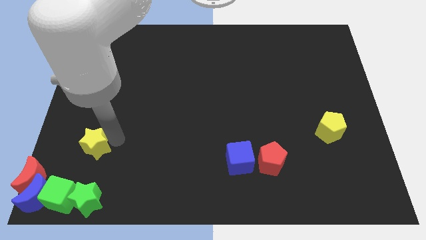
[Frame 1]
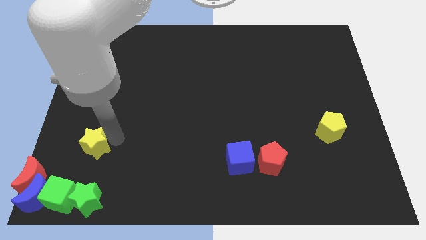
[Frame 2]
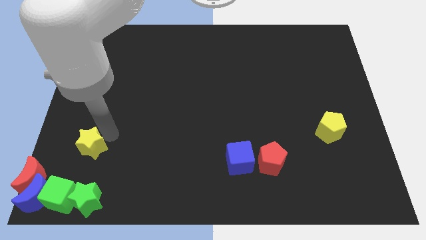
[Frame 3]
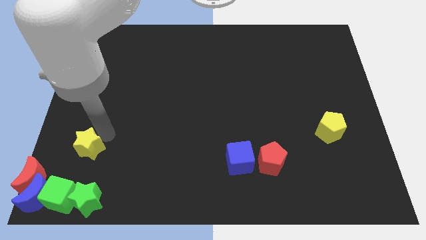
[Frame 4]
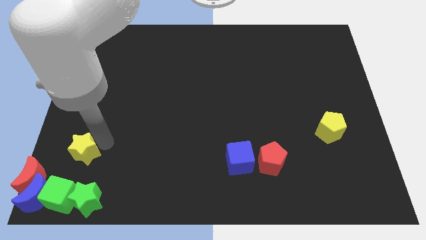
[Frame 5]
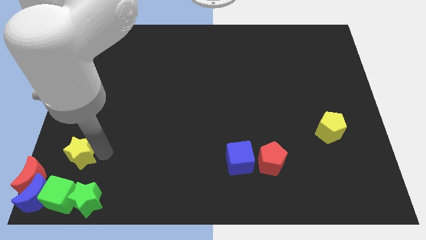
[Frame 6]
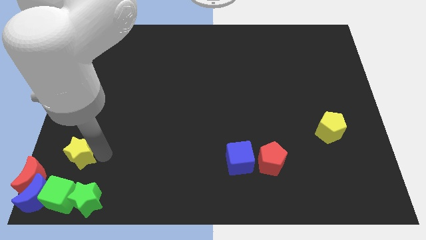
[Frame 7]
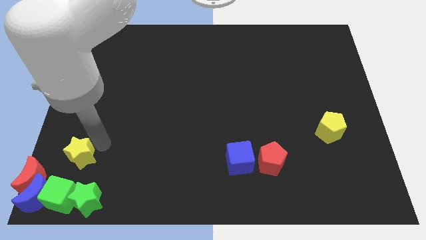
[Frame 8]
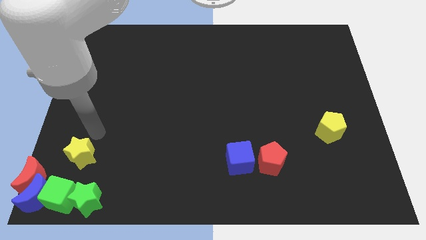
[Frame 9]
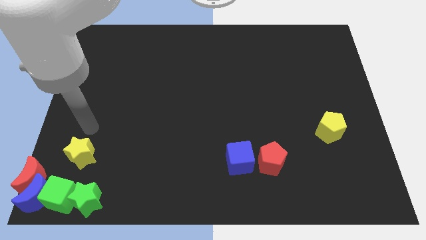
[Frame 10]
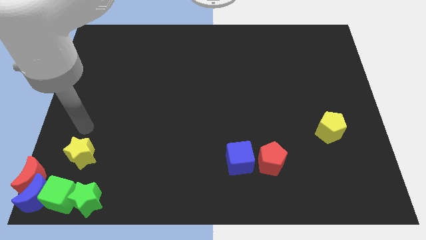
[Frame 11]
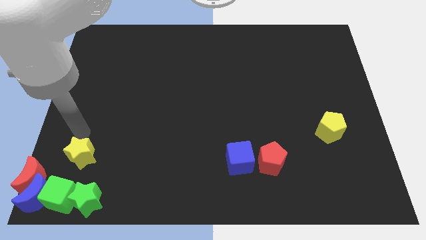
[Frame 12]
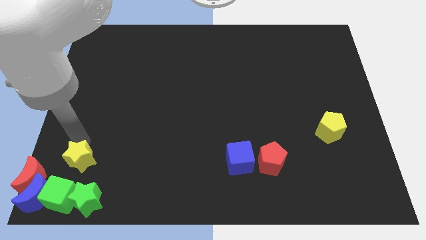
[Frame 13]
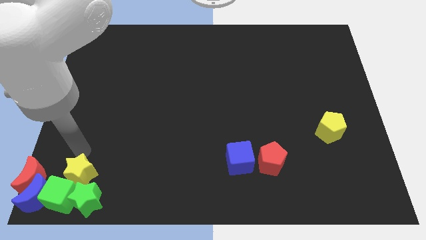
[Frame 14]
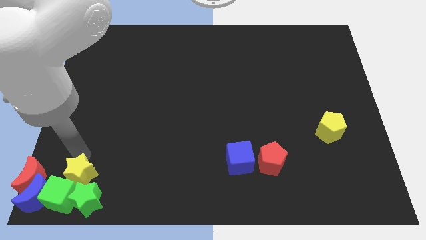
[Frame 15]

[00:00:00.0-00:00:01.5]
push the yellow star to the top of the green cube

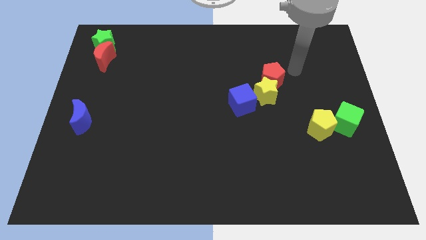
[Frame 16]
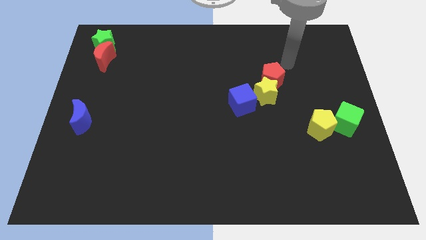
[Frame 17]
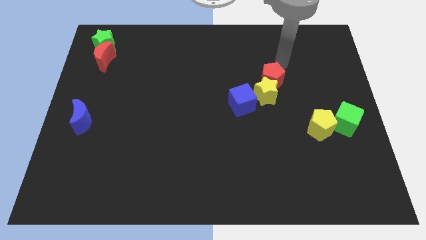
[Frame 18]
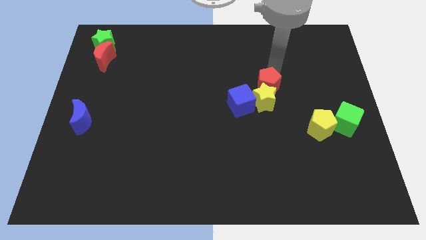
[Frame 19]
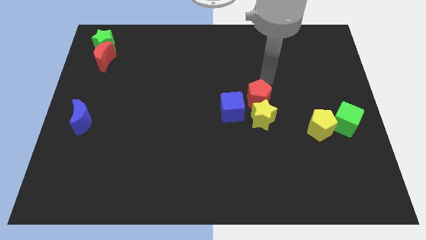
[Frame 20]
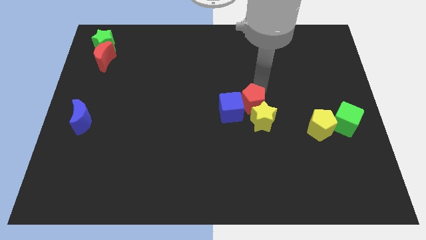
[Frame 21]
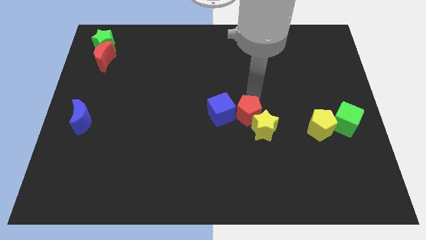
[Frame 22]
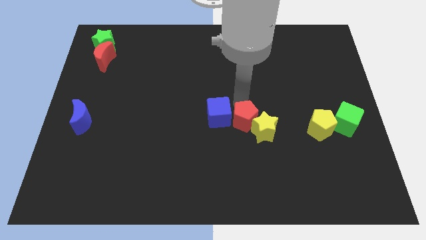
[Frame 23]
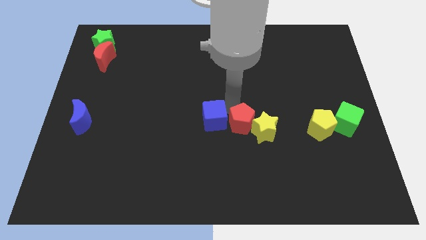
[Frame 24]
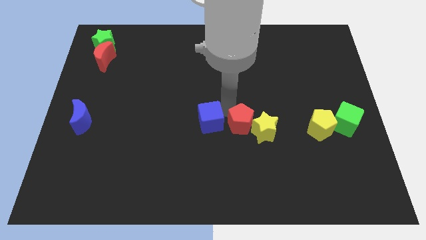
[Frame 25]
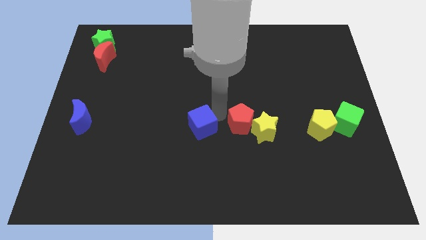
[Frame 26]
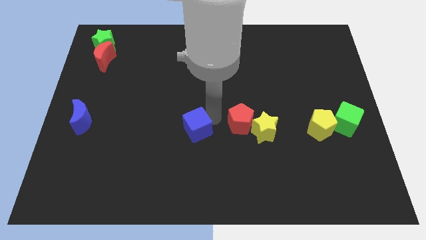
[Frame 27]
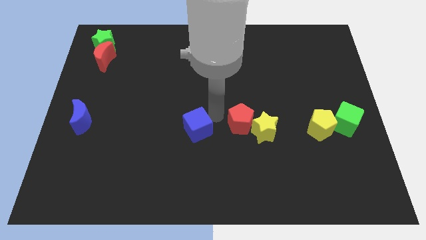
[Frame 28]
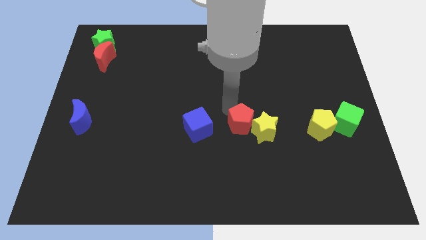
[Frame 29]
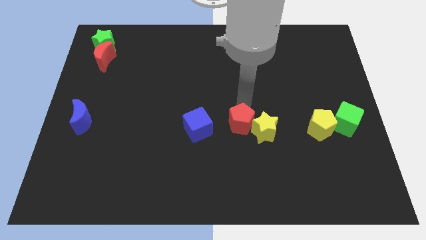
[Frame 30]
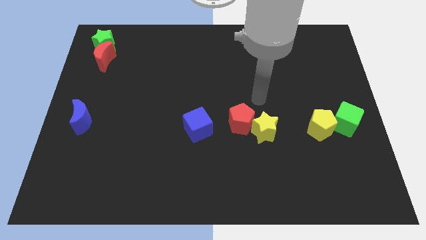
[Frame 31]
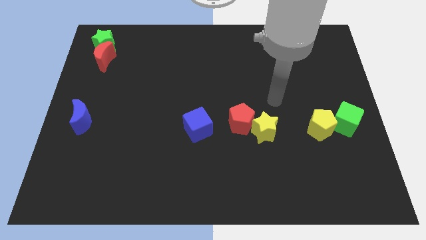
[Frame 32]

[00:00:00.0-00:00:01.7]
separate the blue cube from the group of blocks

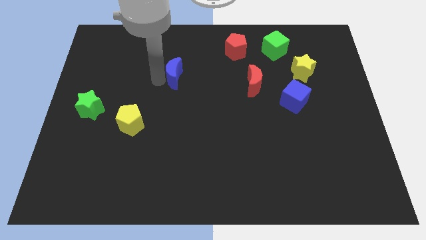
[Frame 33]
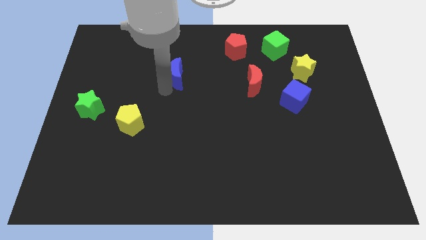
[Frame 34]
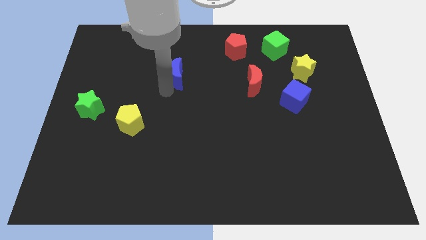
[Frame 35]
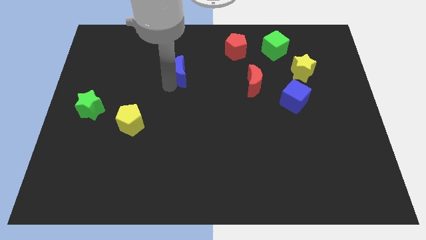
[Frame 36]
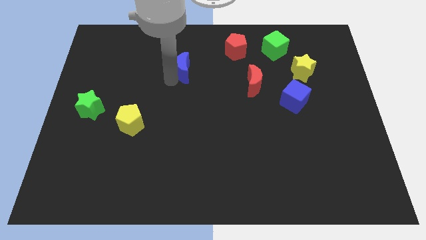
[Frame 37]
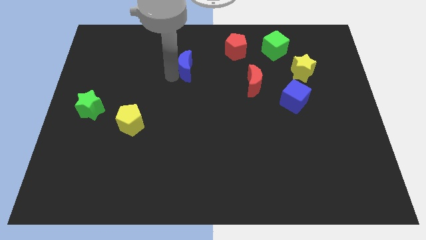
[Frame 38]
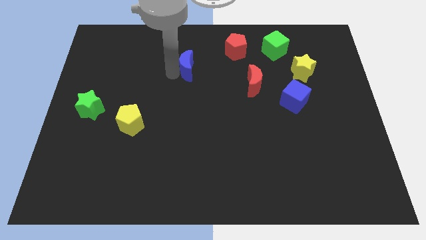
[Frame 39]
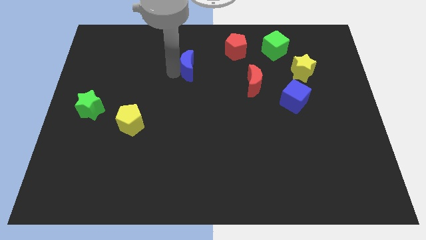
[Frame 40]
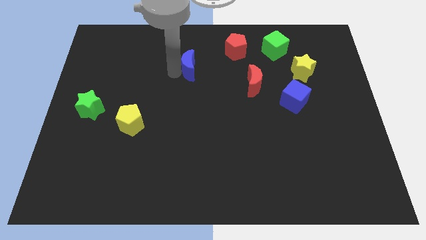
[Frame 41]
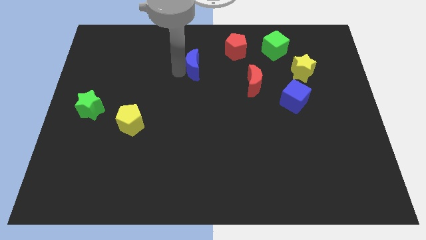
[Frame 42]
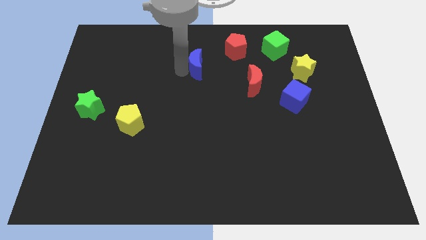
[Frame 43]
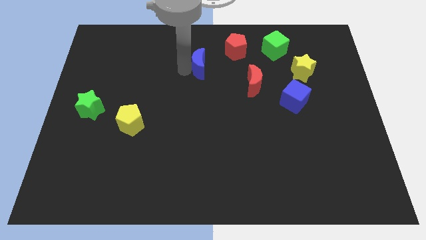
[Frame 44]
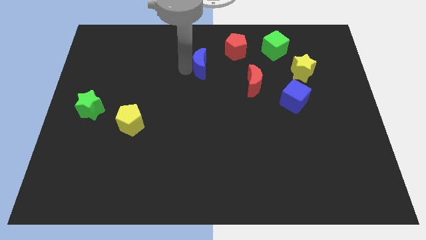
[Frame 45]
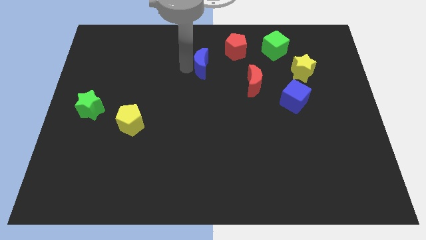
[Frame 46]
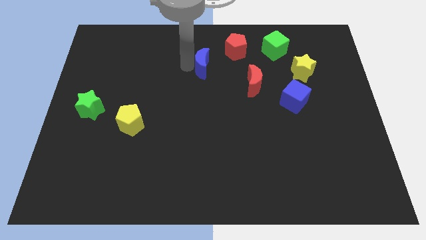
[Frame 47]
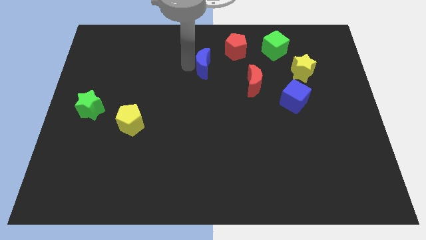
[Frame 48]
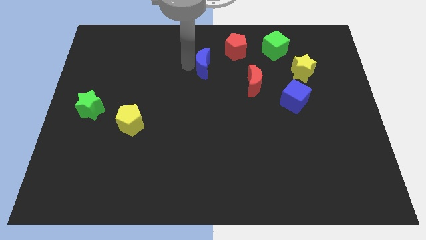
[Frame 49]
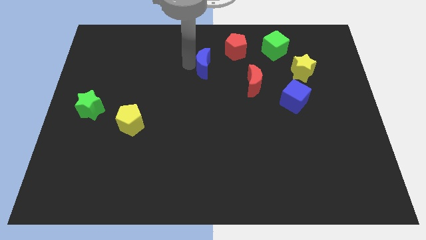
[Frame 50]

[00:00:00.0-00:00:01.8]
move the blue moon diagonally to the red pentagon

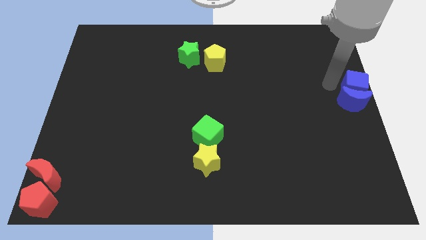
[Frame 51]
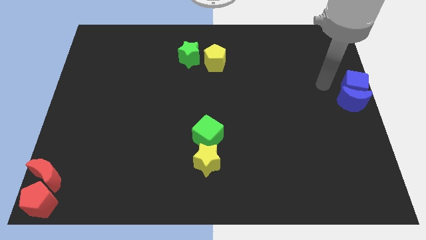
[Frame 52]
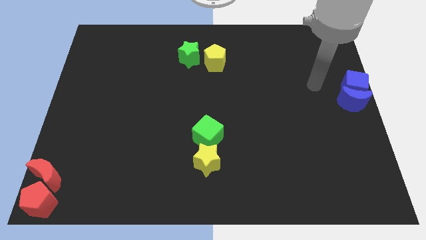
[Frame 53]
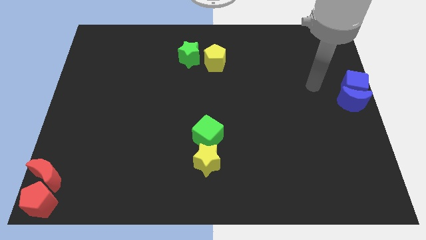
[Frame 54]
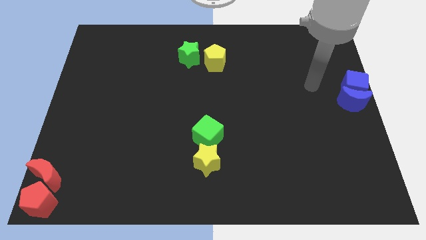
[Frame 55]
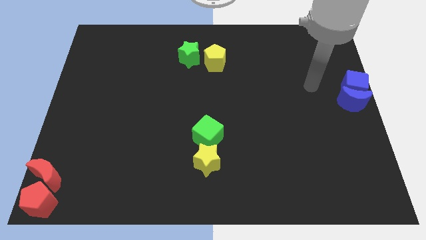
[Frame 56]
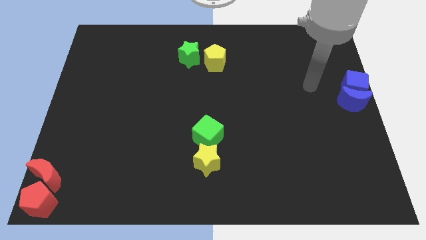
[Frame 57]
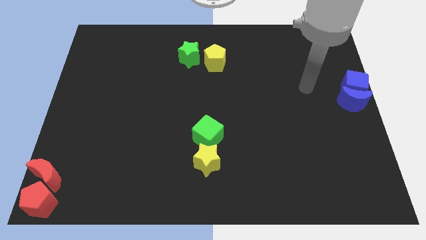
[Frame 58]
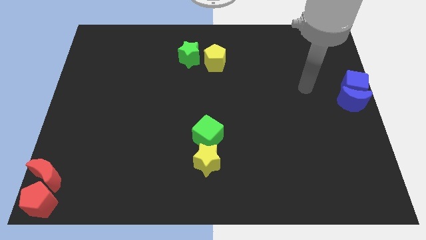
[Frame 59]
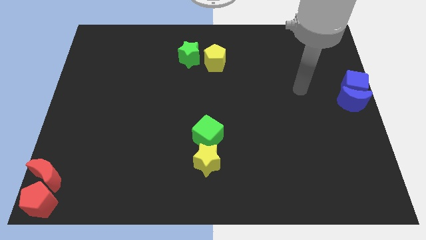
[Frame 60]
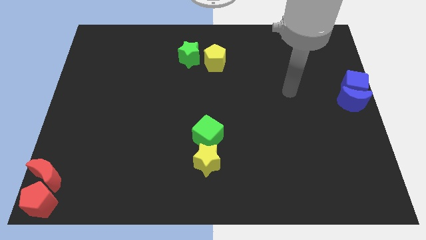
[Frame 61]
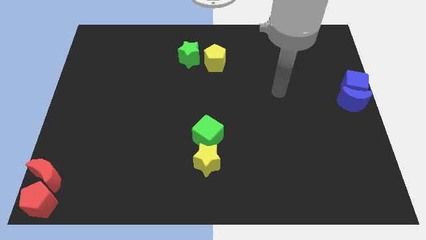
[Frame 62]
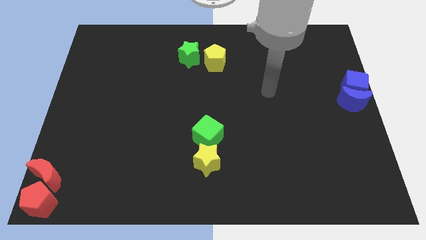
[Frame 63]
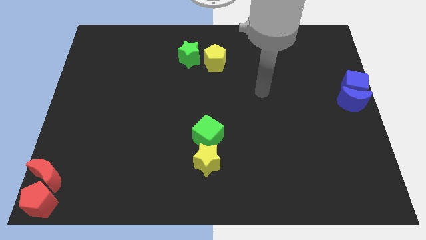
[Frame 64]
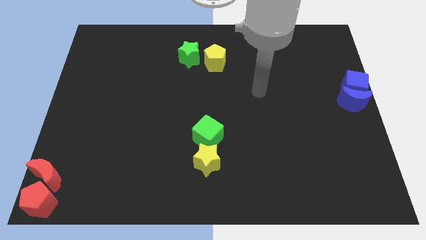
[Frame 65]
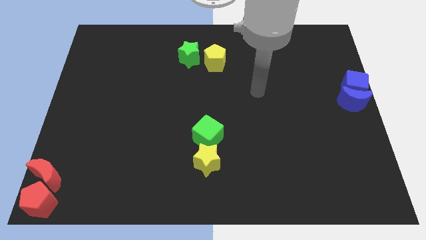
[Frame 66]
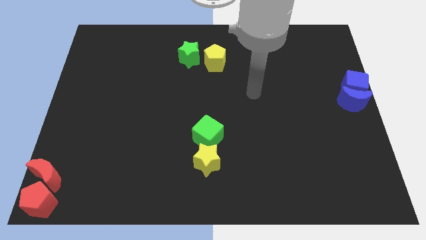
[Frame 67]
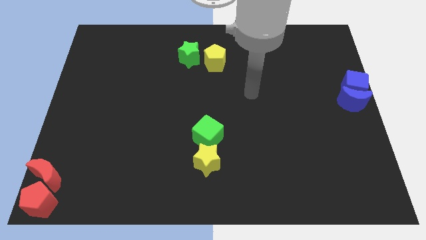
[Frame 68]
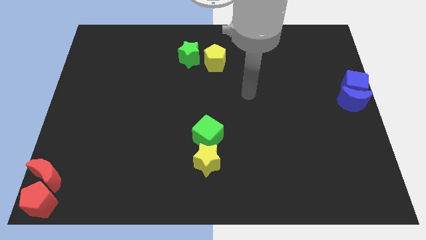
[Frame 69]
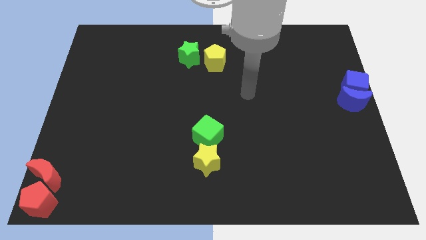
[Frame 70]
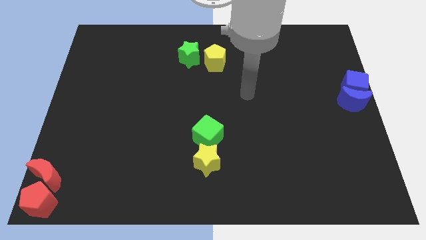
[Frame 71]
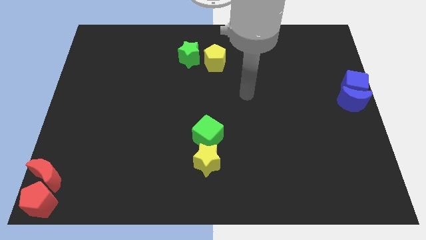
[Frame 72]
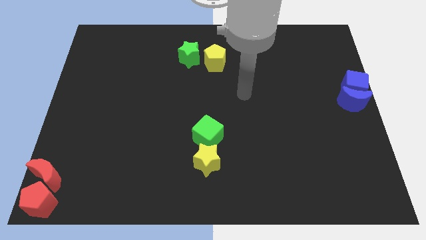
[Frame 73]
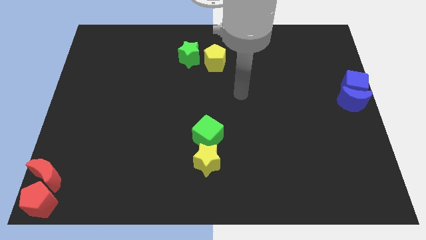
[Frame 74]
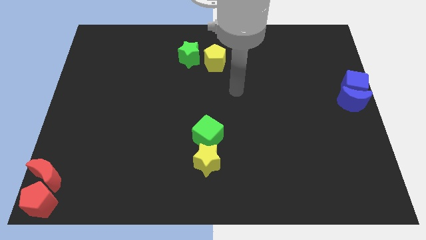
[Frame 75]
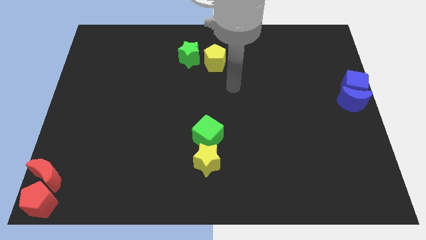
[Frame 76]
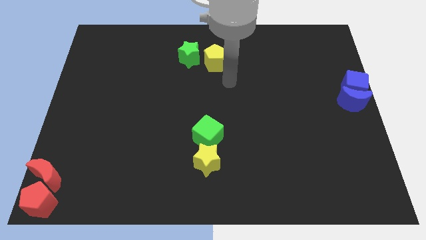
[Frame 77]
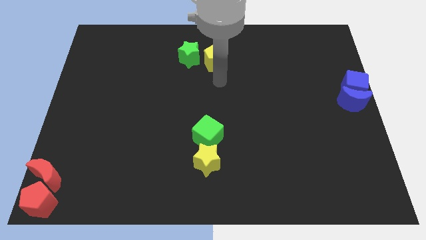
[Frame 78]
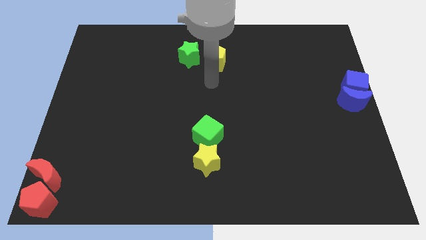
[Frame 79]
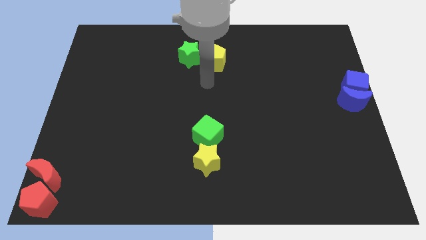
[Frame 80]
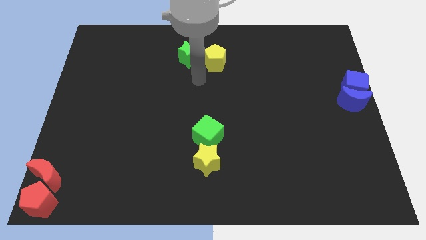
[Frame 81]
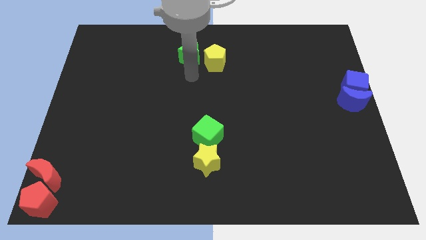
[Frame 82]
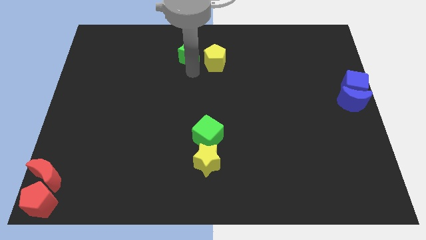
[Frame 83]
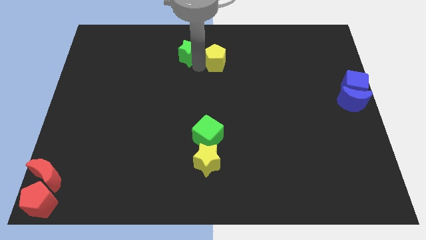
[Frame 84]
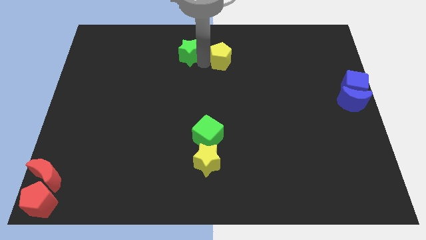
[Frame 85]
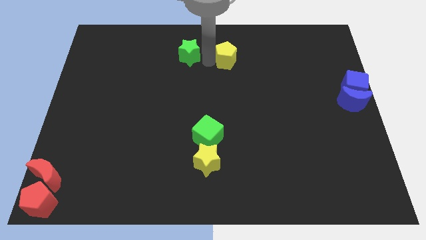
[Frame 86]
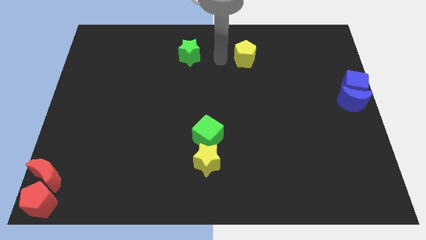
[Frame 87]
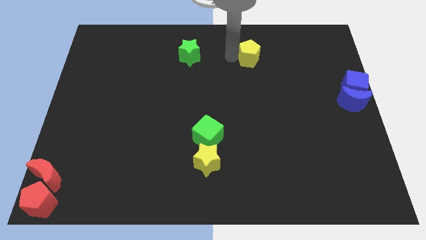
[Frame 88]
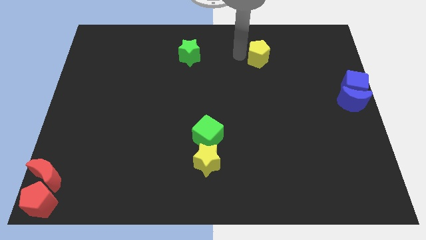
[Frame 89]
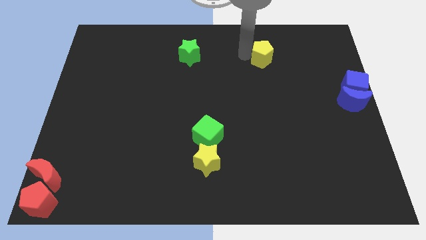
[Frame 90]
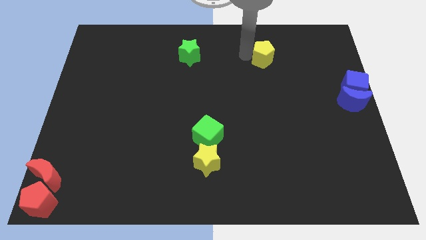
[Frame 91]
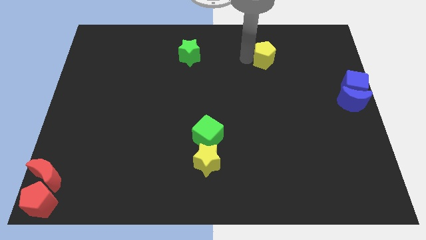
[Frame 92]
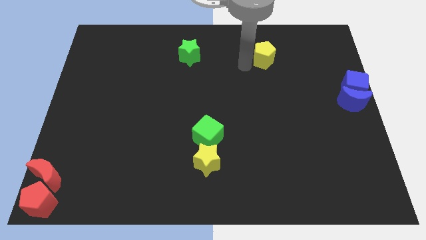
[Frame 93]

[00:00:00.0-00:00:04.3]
separate the green star and the yellow penatgon
